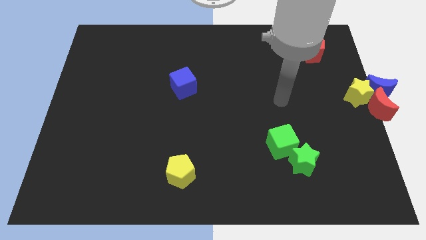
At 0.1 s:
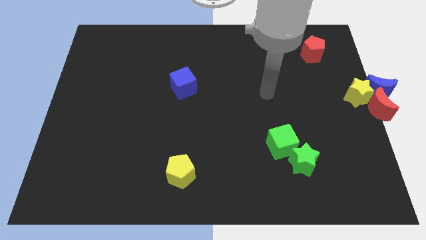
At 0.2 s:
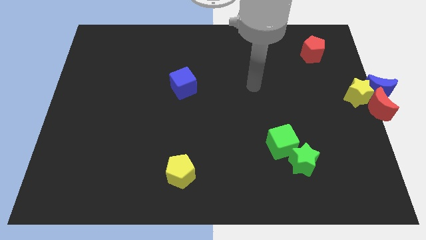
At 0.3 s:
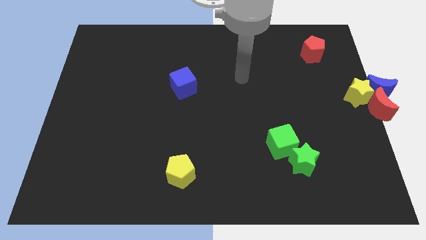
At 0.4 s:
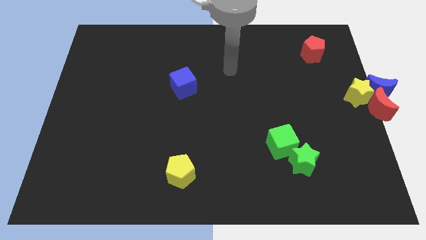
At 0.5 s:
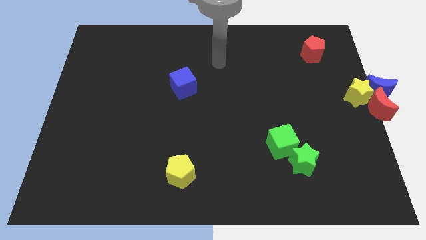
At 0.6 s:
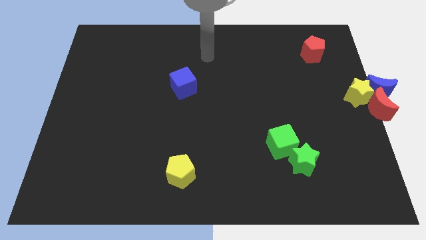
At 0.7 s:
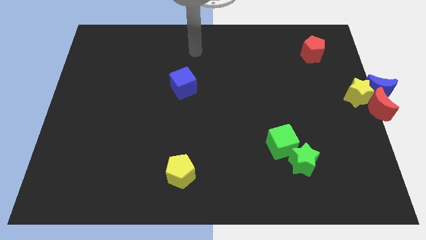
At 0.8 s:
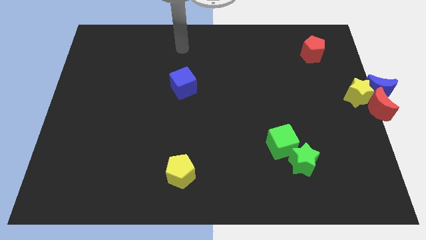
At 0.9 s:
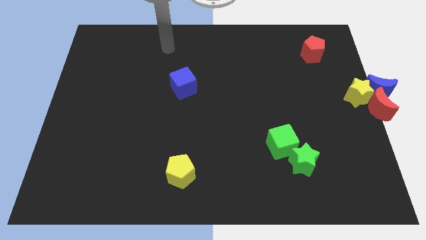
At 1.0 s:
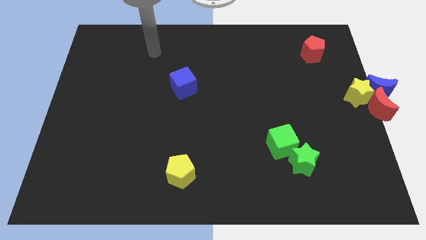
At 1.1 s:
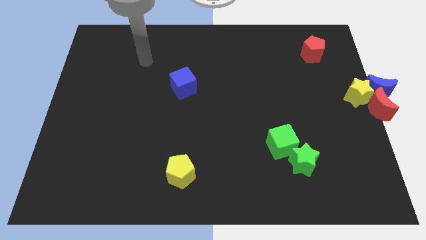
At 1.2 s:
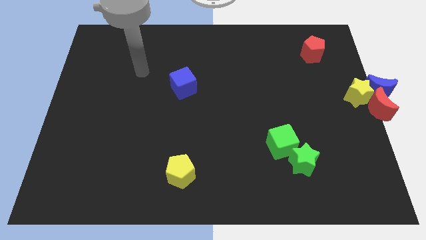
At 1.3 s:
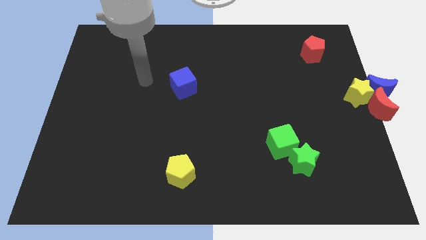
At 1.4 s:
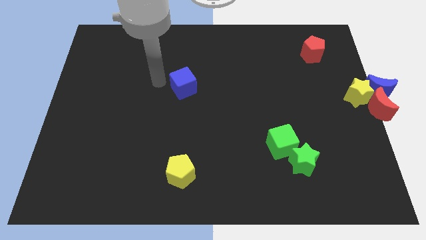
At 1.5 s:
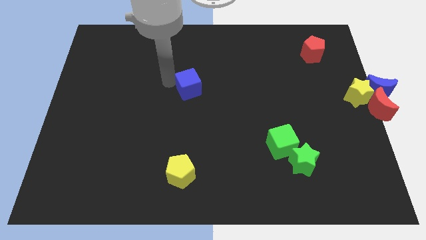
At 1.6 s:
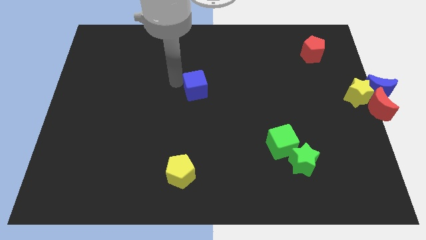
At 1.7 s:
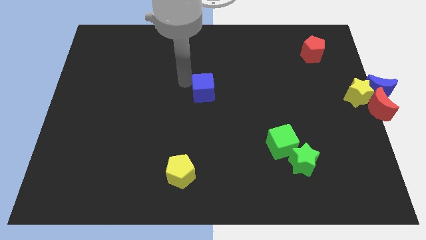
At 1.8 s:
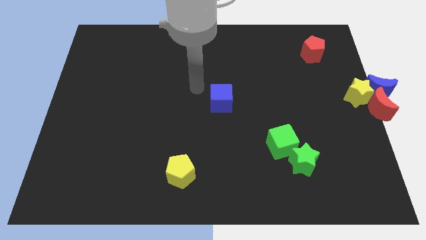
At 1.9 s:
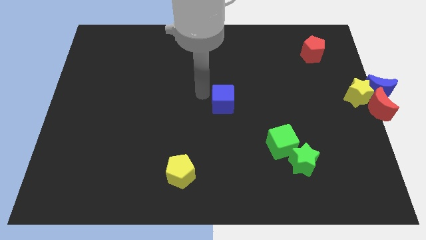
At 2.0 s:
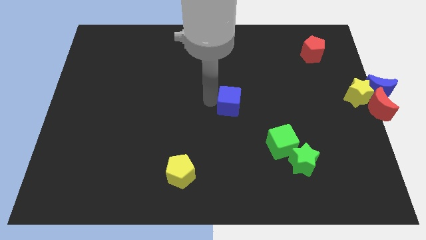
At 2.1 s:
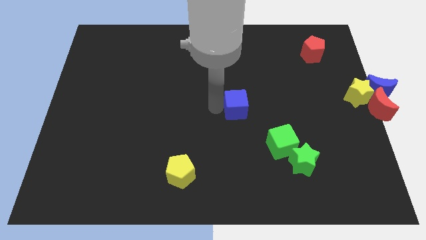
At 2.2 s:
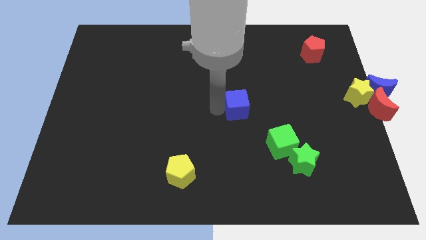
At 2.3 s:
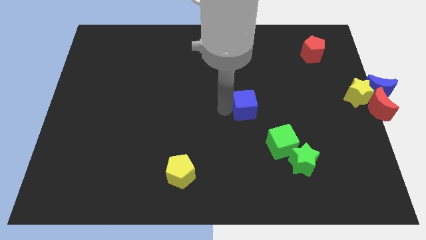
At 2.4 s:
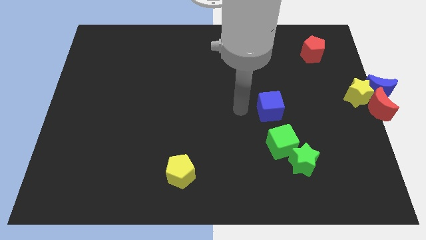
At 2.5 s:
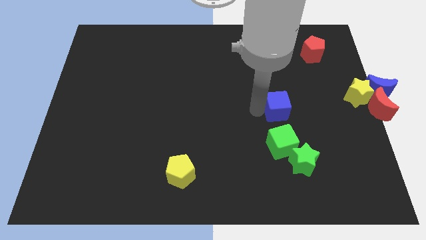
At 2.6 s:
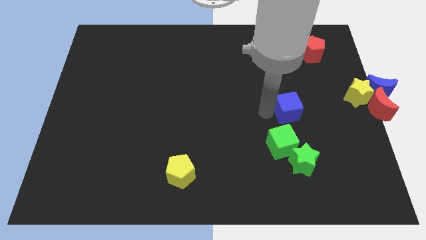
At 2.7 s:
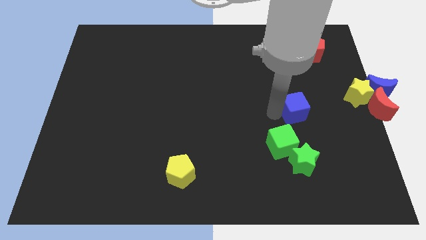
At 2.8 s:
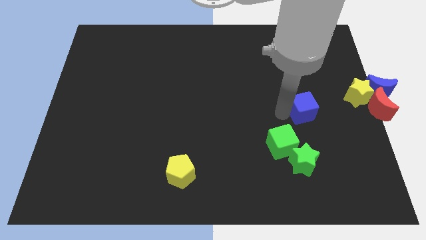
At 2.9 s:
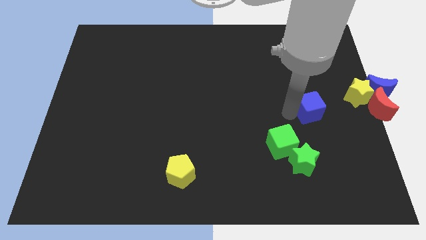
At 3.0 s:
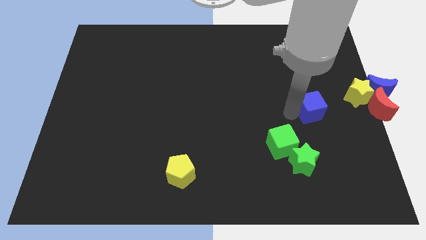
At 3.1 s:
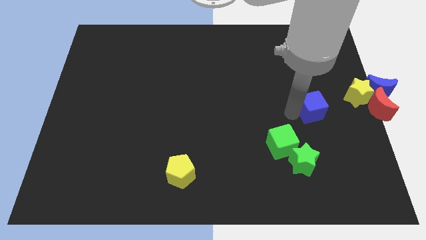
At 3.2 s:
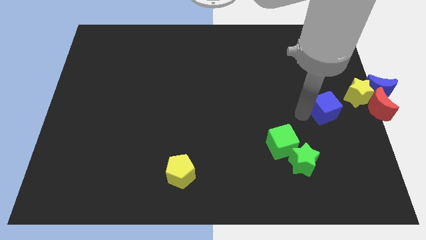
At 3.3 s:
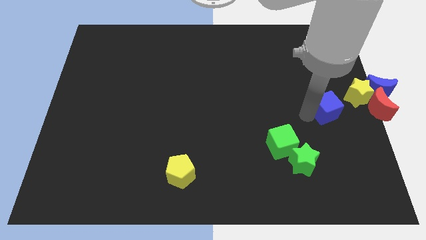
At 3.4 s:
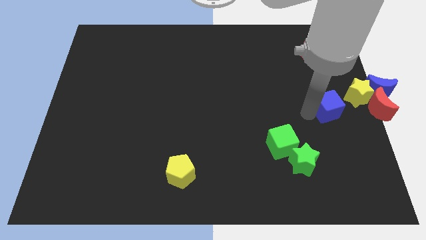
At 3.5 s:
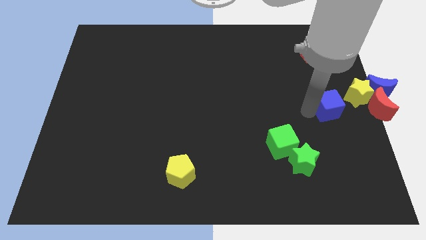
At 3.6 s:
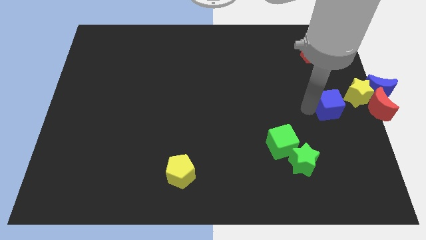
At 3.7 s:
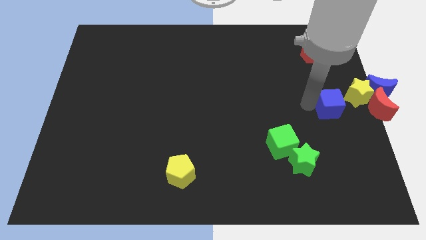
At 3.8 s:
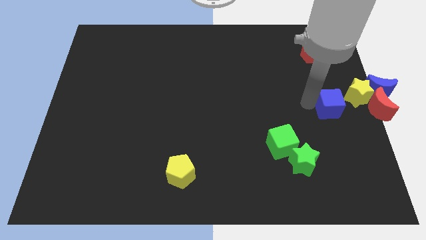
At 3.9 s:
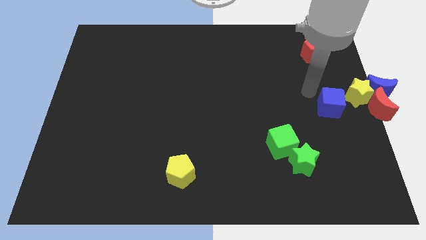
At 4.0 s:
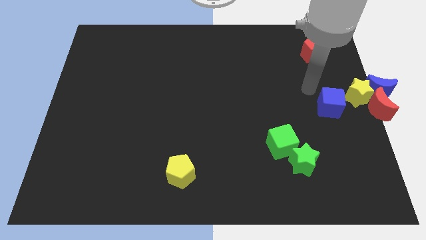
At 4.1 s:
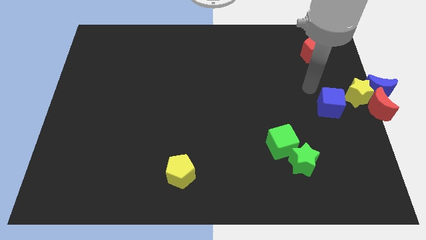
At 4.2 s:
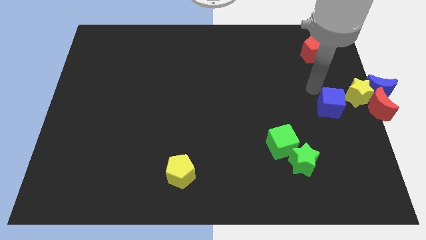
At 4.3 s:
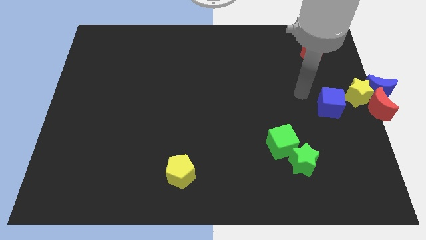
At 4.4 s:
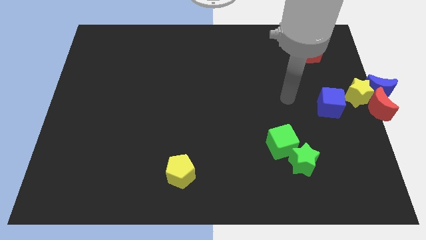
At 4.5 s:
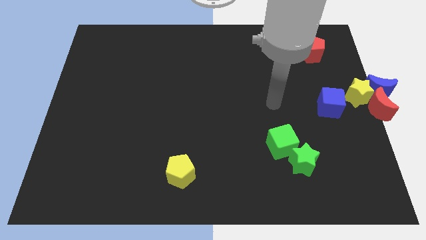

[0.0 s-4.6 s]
push the blue cube to the left of the yellow star

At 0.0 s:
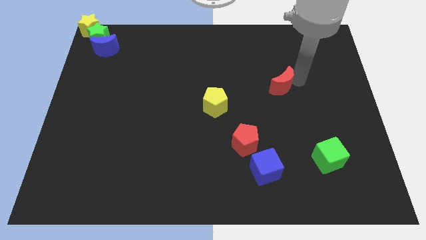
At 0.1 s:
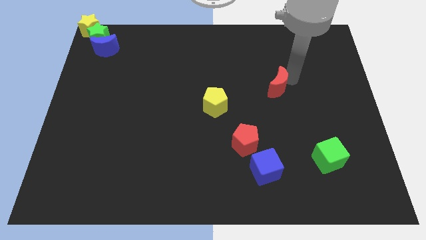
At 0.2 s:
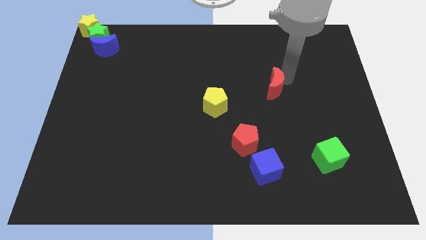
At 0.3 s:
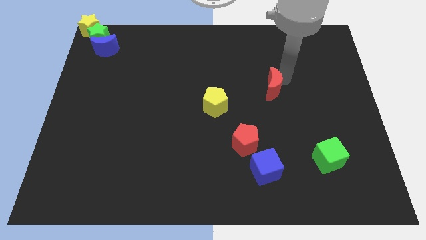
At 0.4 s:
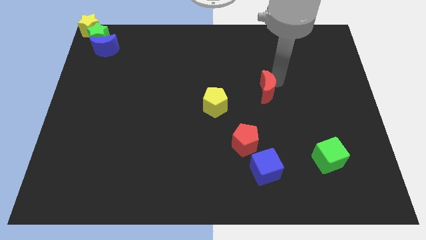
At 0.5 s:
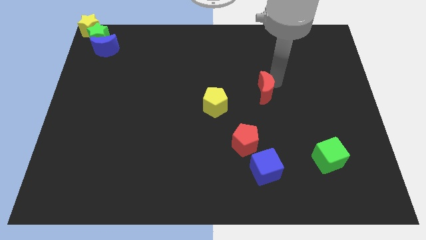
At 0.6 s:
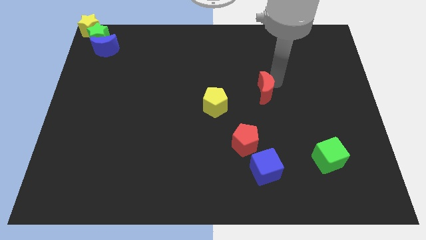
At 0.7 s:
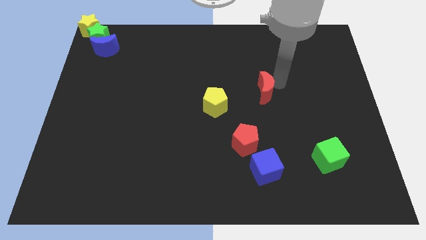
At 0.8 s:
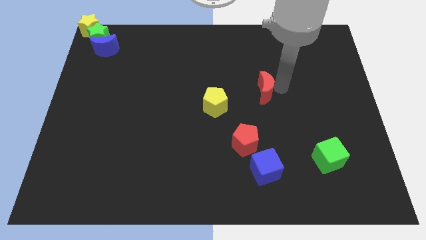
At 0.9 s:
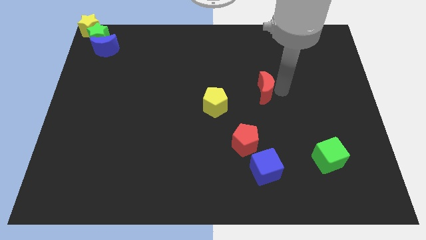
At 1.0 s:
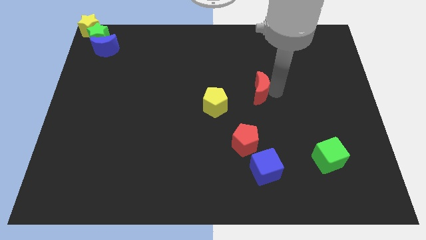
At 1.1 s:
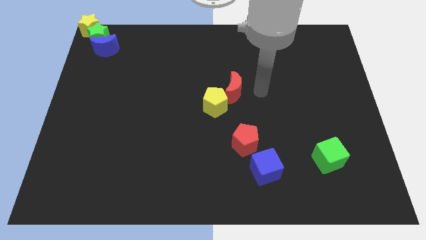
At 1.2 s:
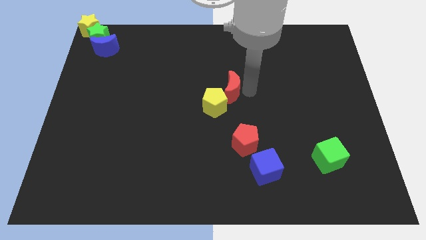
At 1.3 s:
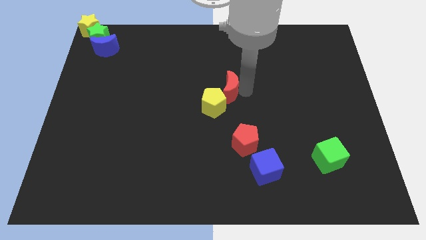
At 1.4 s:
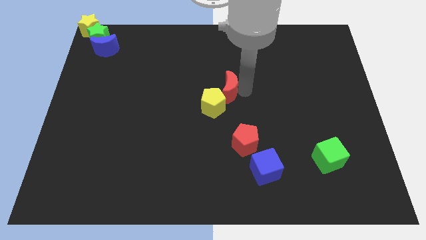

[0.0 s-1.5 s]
drag the red moon into the righ t side of the yellow pentagon

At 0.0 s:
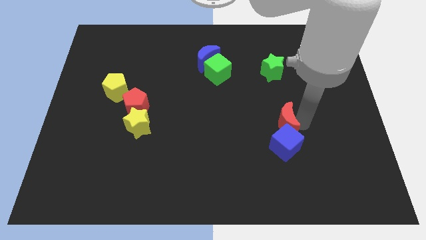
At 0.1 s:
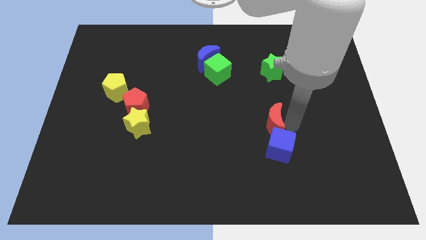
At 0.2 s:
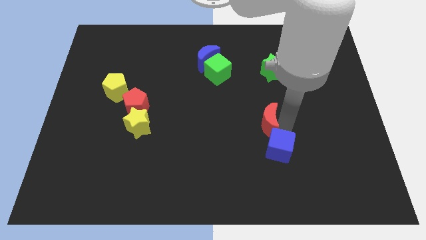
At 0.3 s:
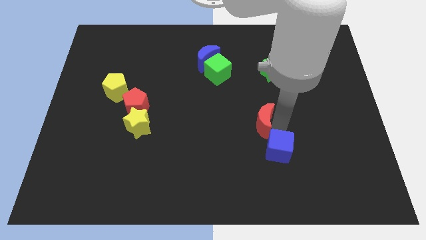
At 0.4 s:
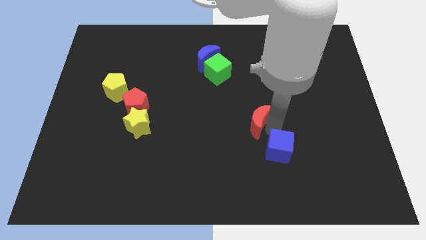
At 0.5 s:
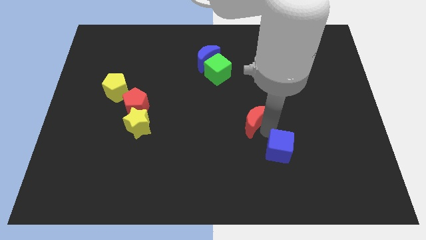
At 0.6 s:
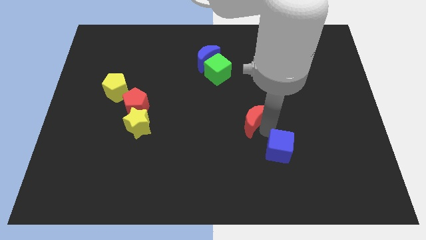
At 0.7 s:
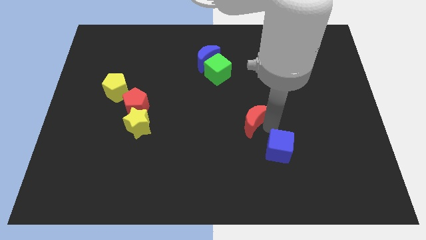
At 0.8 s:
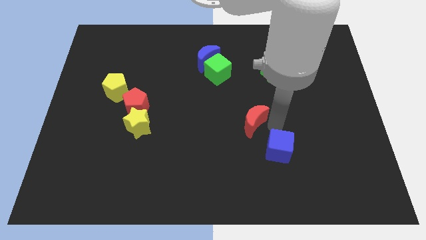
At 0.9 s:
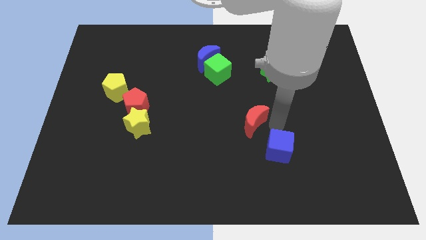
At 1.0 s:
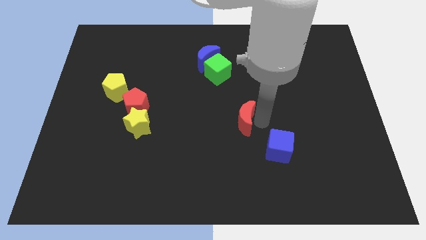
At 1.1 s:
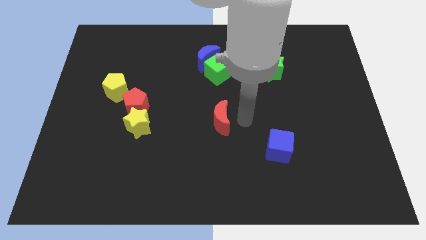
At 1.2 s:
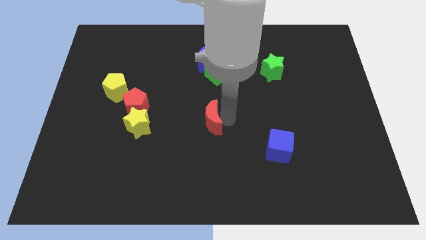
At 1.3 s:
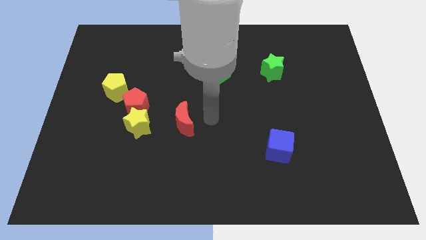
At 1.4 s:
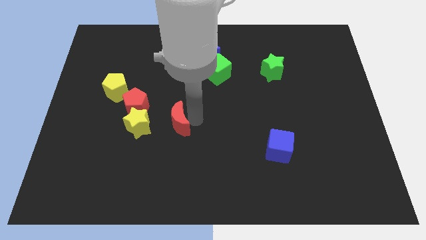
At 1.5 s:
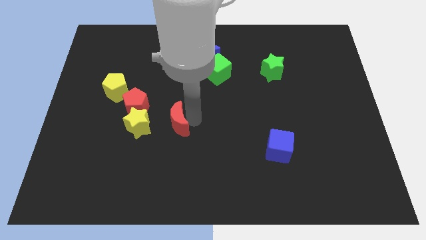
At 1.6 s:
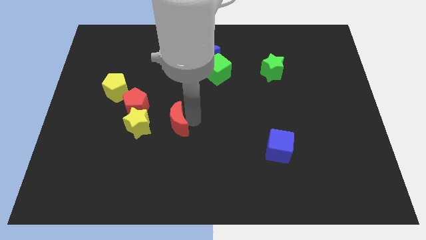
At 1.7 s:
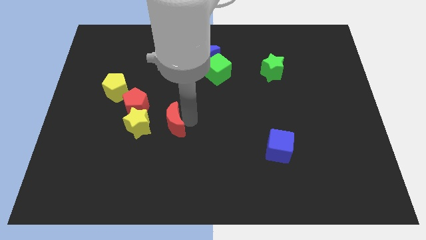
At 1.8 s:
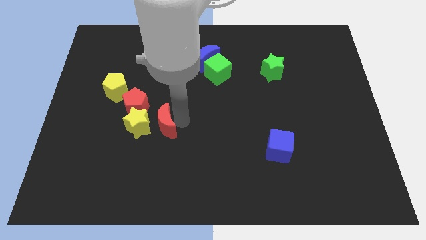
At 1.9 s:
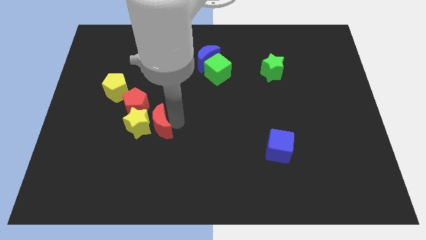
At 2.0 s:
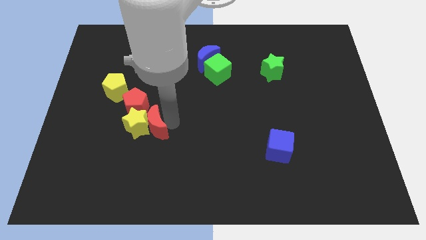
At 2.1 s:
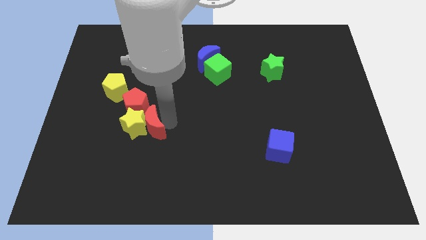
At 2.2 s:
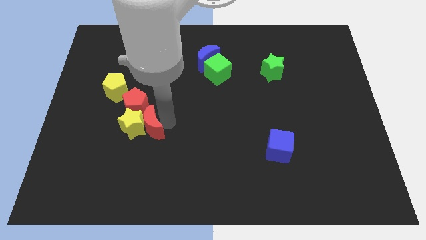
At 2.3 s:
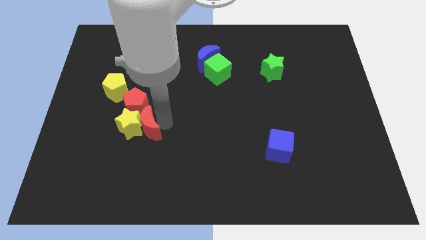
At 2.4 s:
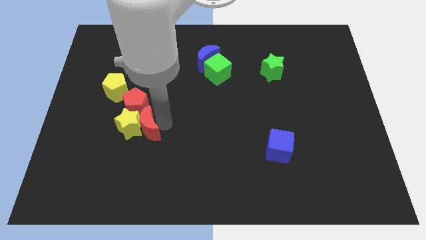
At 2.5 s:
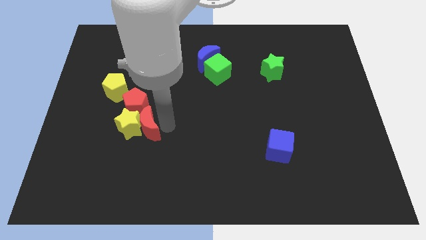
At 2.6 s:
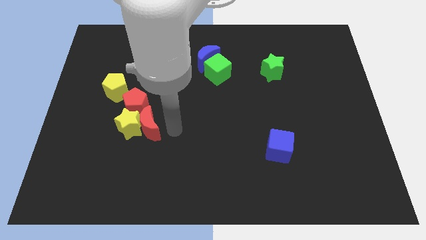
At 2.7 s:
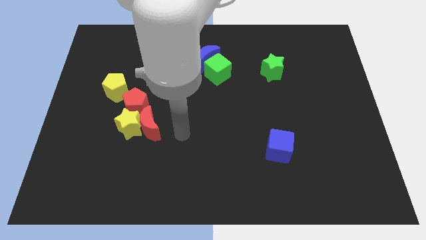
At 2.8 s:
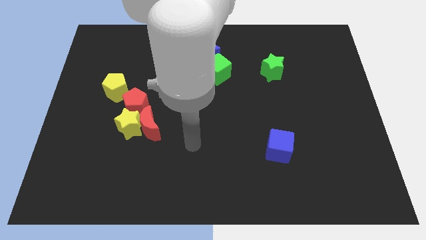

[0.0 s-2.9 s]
separate the red moon from the blue cube
